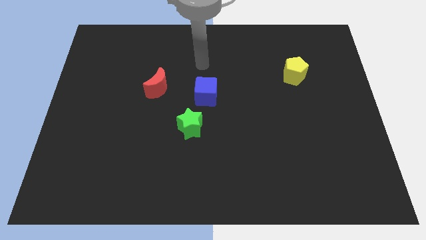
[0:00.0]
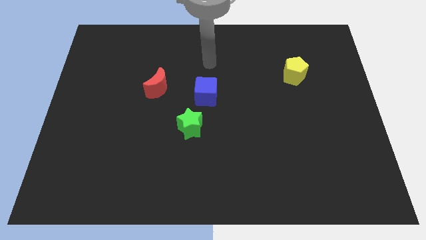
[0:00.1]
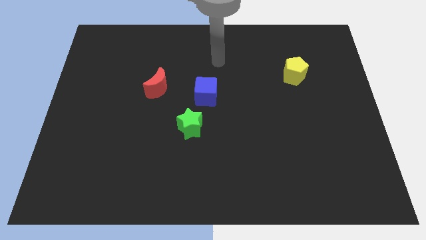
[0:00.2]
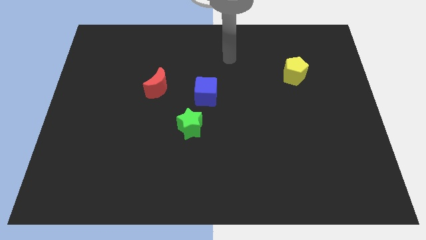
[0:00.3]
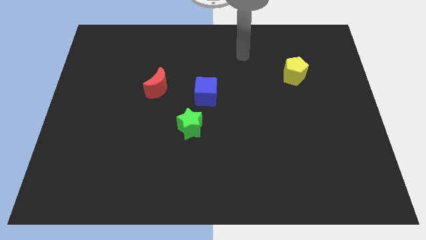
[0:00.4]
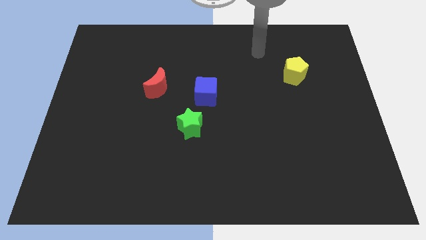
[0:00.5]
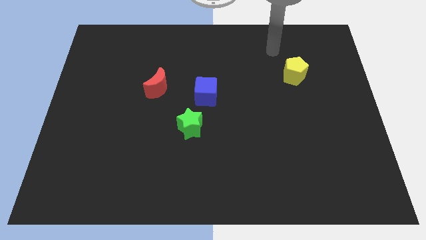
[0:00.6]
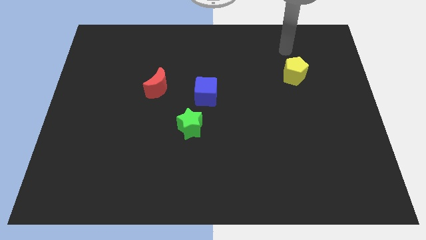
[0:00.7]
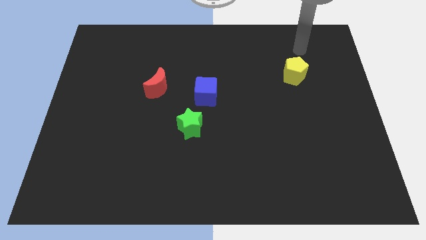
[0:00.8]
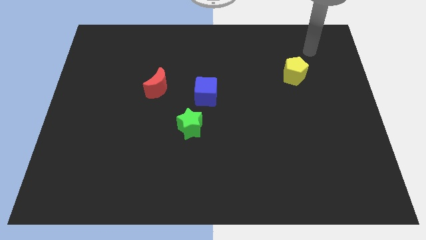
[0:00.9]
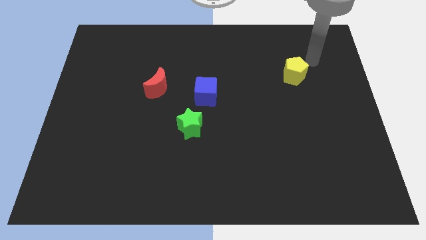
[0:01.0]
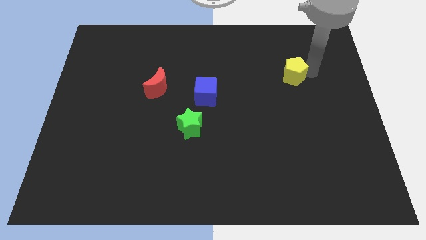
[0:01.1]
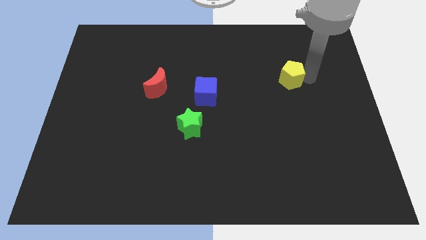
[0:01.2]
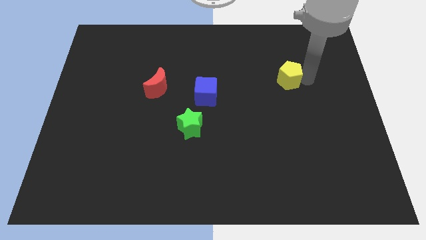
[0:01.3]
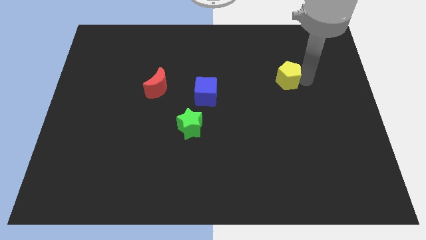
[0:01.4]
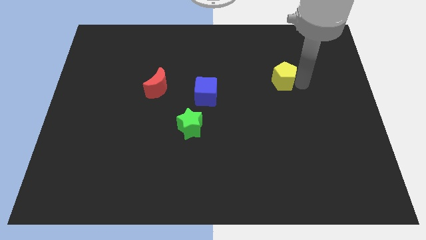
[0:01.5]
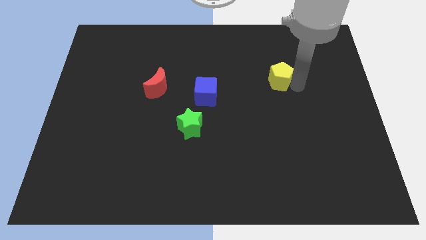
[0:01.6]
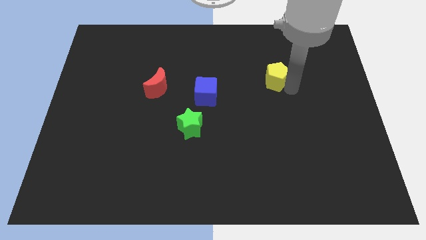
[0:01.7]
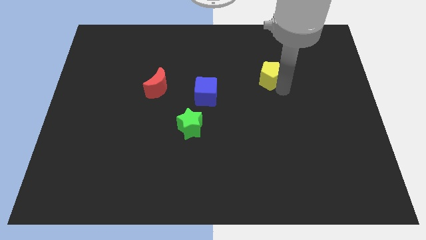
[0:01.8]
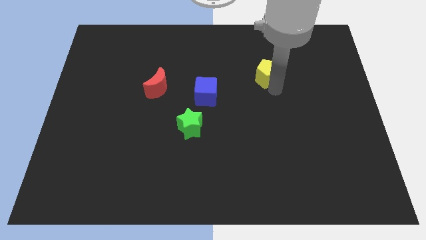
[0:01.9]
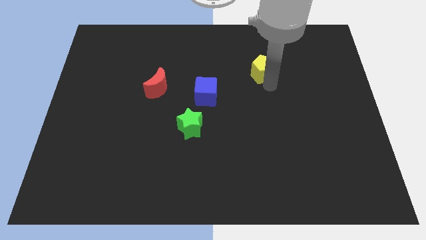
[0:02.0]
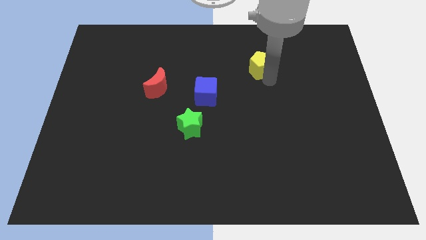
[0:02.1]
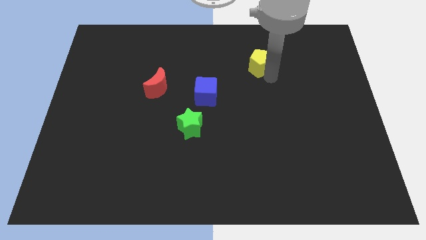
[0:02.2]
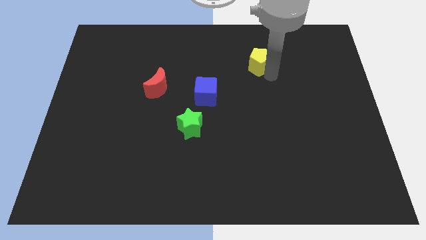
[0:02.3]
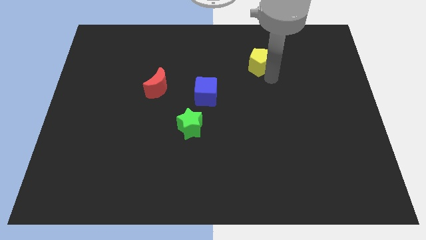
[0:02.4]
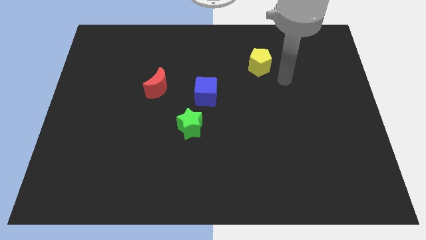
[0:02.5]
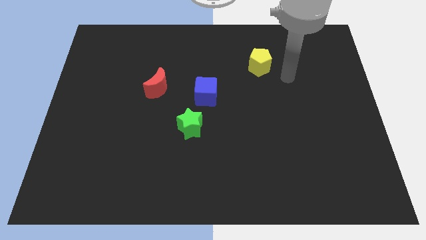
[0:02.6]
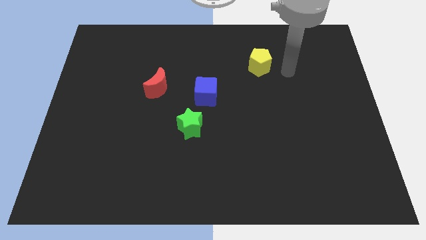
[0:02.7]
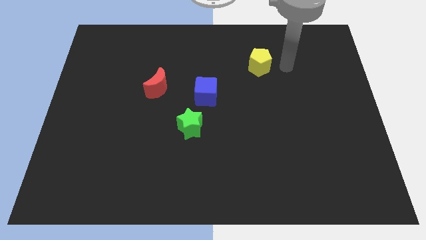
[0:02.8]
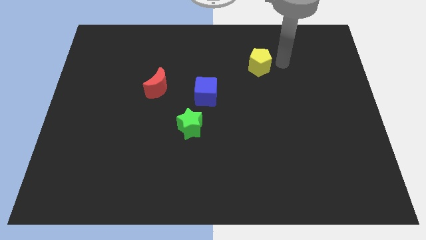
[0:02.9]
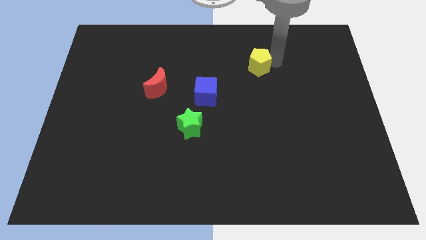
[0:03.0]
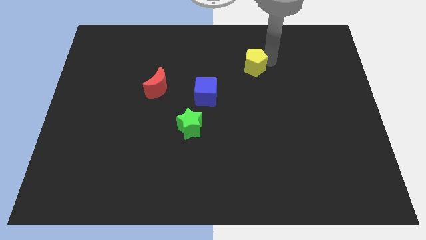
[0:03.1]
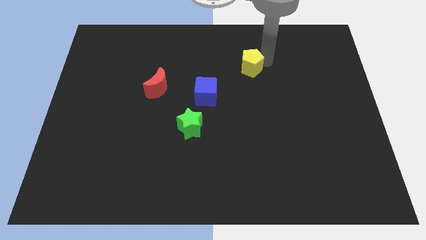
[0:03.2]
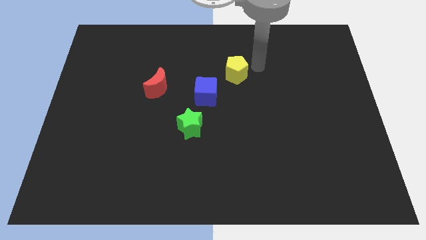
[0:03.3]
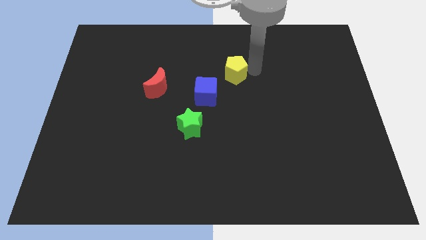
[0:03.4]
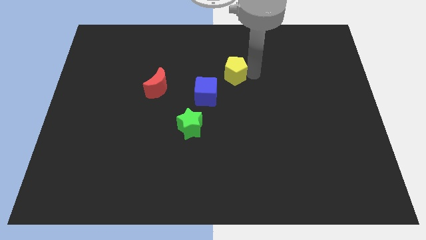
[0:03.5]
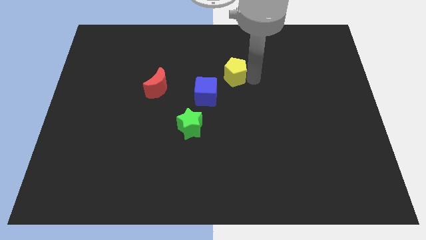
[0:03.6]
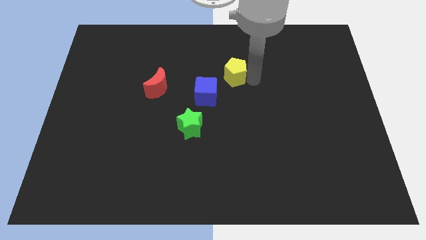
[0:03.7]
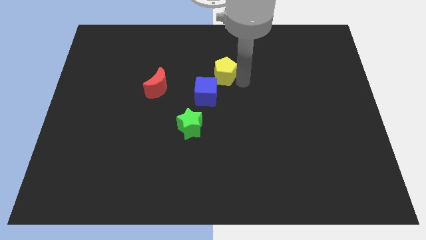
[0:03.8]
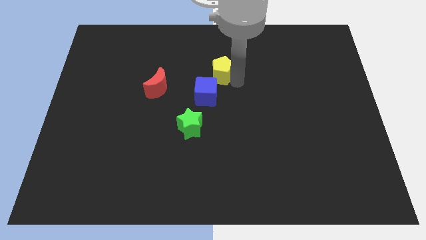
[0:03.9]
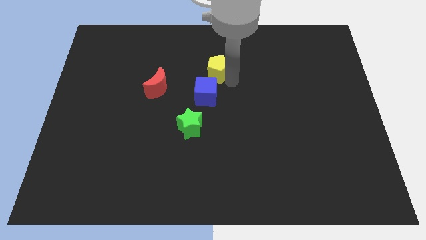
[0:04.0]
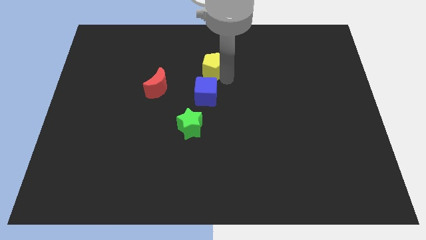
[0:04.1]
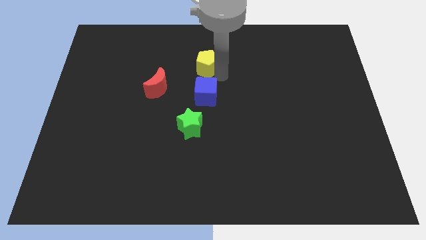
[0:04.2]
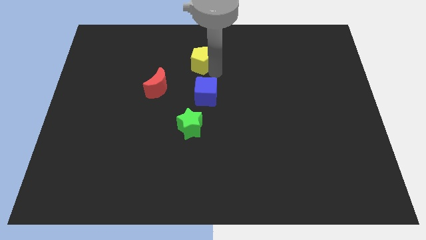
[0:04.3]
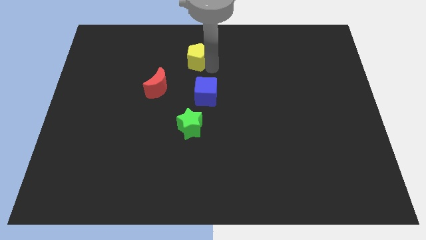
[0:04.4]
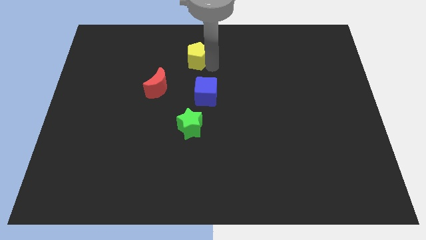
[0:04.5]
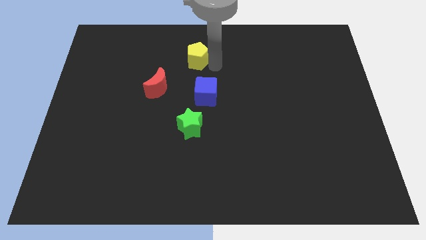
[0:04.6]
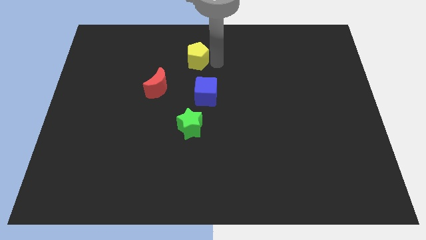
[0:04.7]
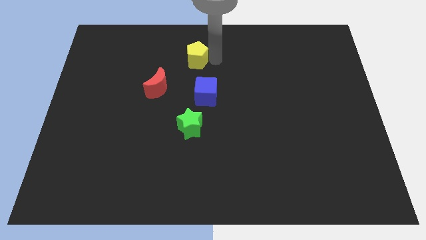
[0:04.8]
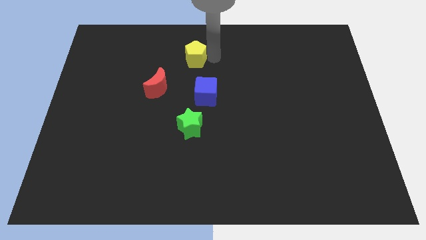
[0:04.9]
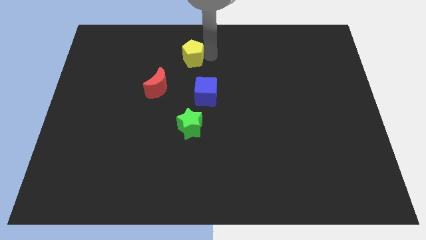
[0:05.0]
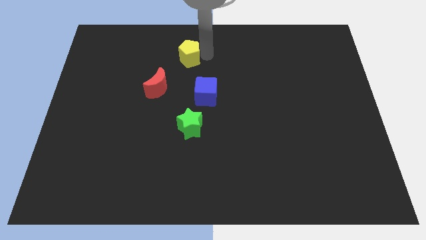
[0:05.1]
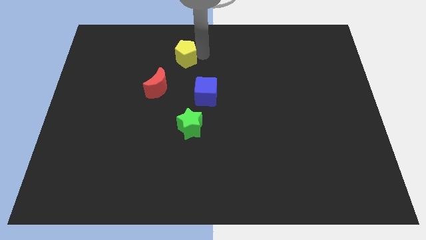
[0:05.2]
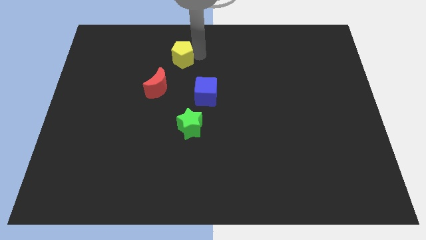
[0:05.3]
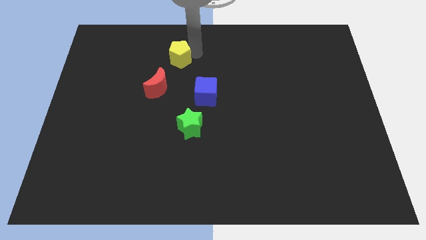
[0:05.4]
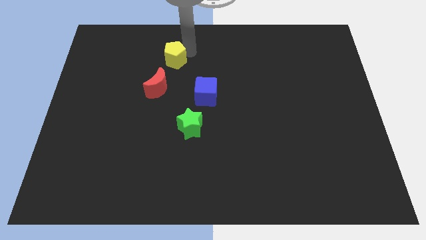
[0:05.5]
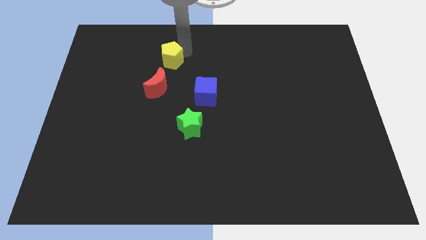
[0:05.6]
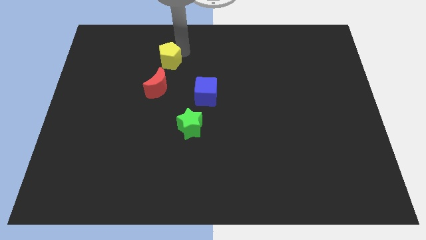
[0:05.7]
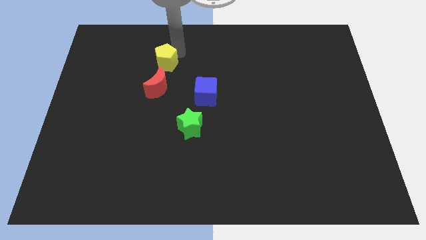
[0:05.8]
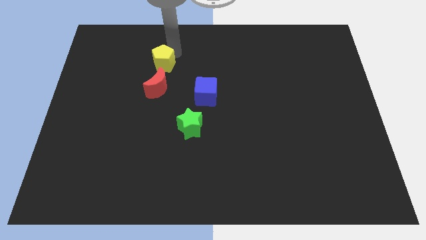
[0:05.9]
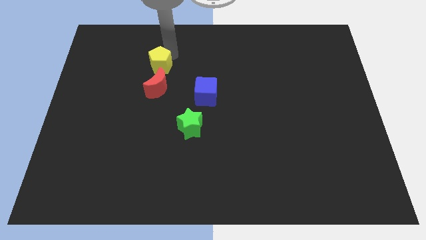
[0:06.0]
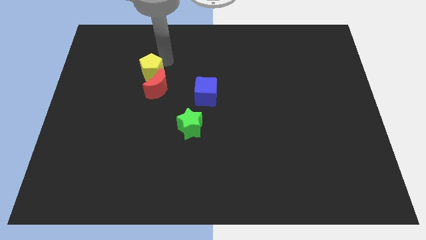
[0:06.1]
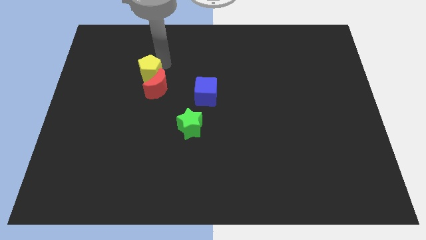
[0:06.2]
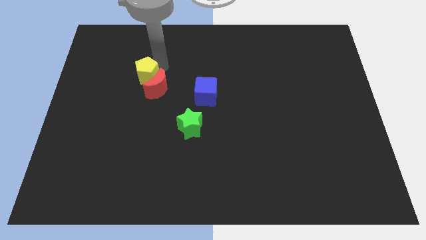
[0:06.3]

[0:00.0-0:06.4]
move the yellow pentagon to the red block

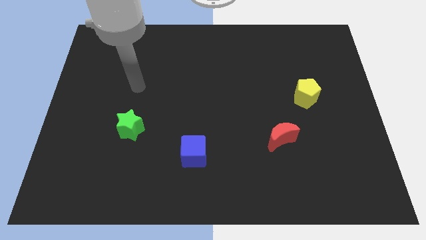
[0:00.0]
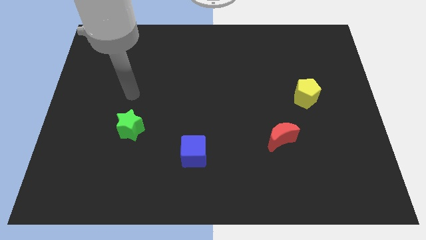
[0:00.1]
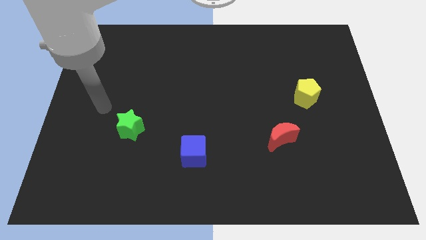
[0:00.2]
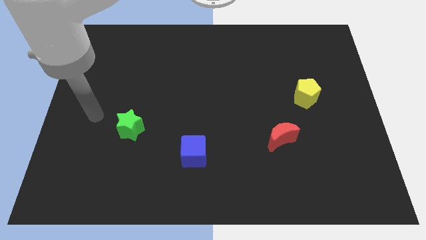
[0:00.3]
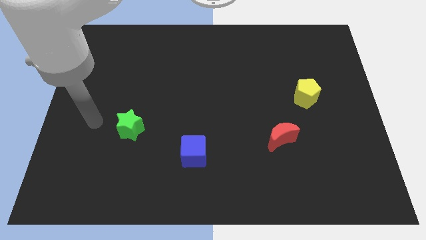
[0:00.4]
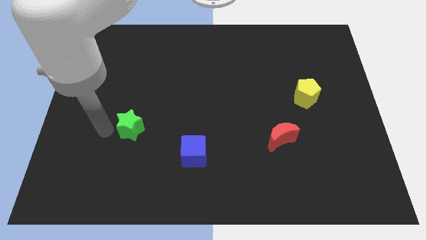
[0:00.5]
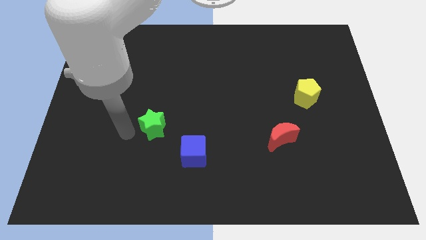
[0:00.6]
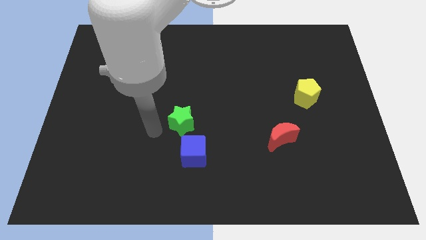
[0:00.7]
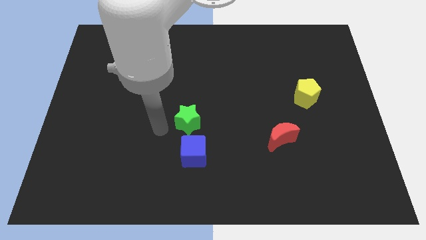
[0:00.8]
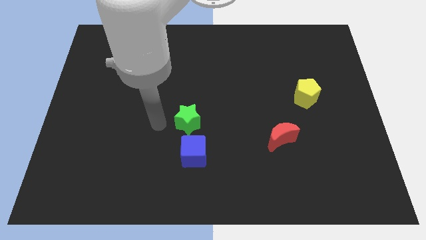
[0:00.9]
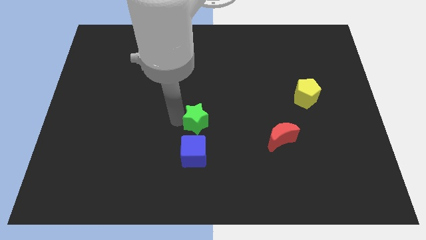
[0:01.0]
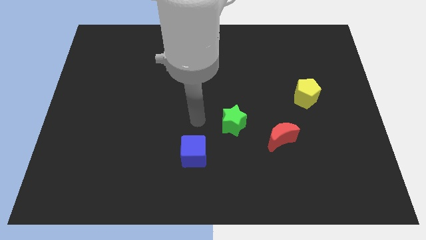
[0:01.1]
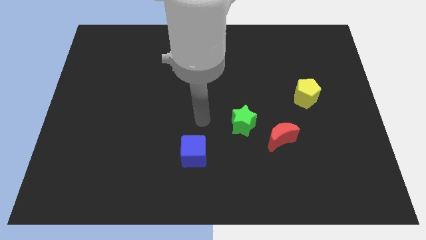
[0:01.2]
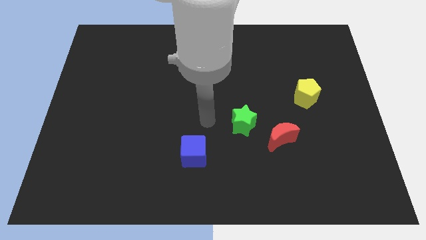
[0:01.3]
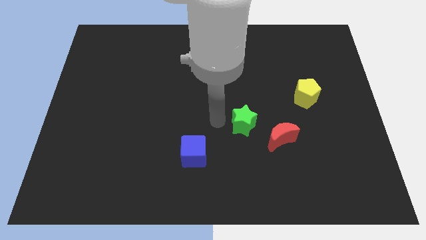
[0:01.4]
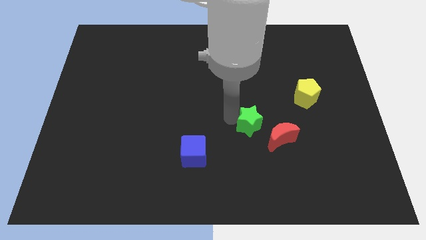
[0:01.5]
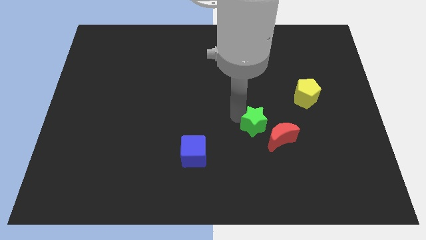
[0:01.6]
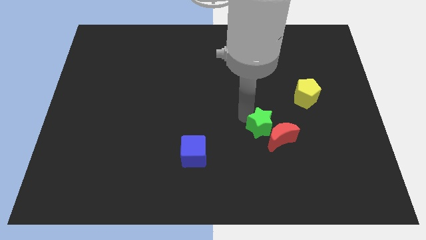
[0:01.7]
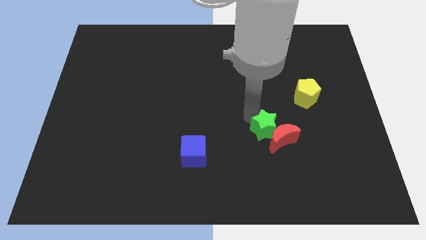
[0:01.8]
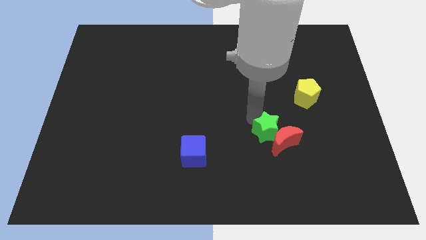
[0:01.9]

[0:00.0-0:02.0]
slide the star towards the red moon

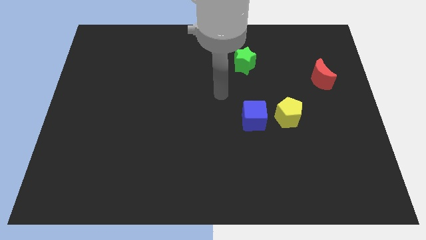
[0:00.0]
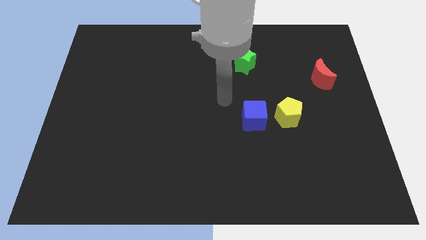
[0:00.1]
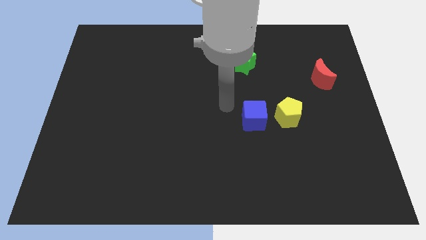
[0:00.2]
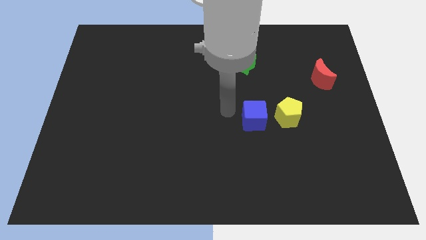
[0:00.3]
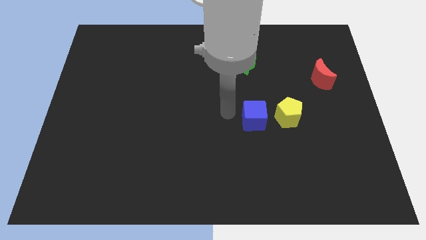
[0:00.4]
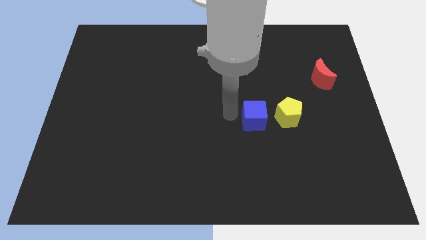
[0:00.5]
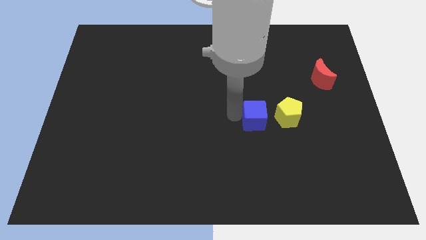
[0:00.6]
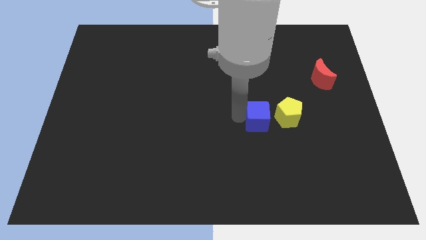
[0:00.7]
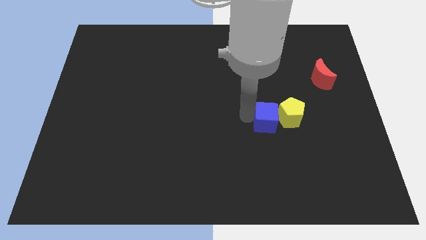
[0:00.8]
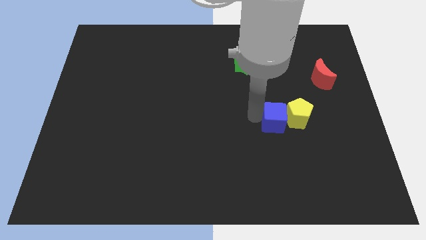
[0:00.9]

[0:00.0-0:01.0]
put the cube close to the yellow pentagon
